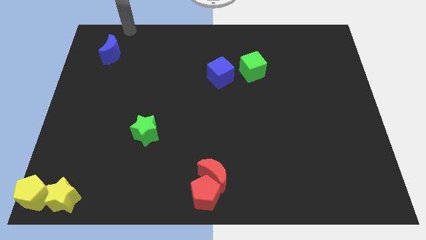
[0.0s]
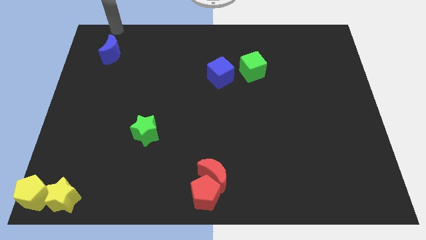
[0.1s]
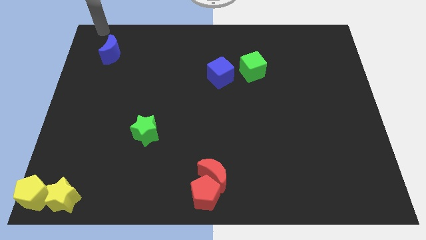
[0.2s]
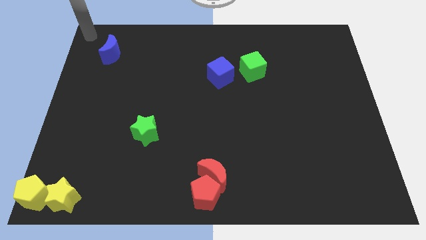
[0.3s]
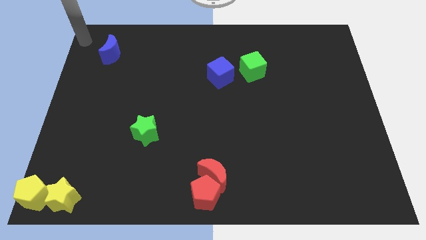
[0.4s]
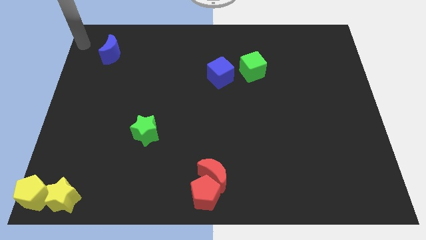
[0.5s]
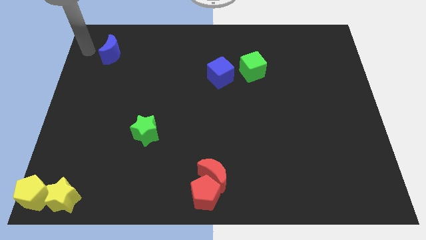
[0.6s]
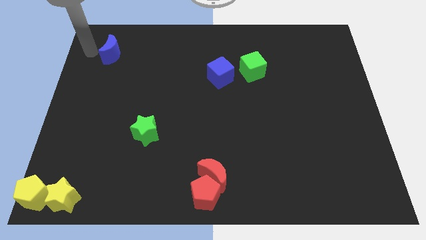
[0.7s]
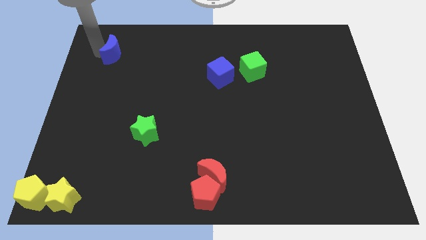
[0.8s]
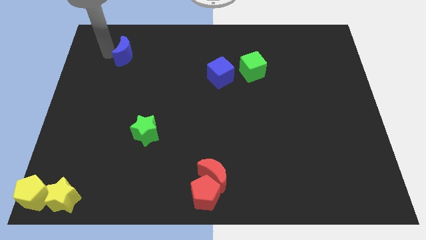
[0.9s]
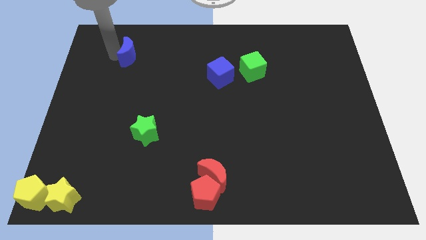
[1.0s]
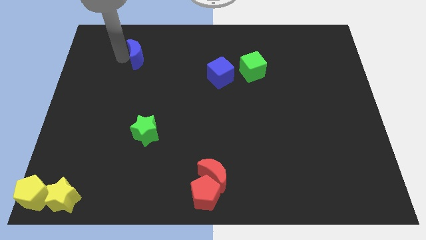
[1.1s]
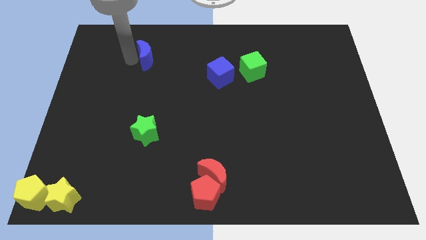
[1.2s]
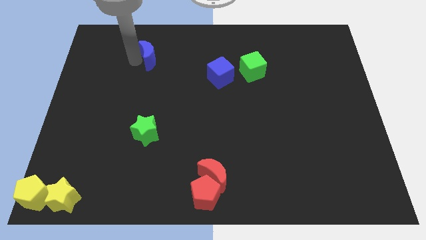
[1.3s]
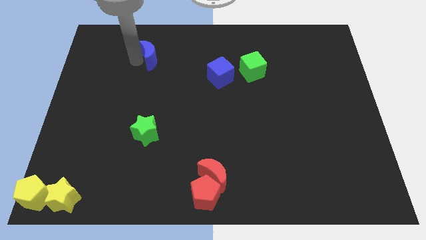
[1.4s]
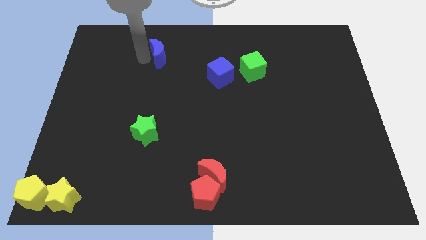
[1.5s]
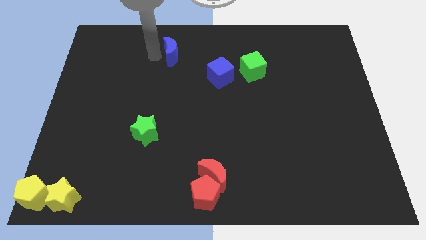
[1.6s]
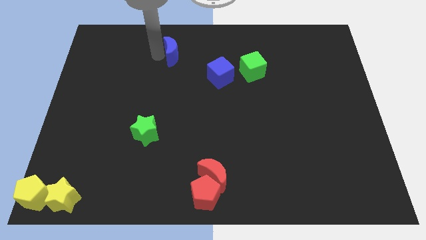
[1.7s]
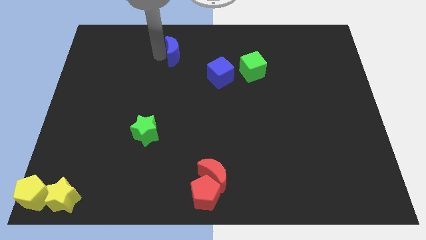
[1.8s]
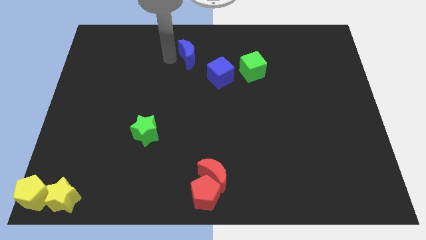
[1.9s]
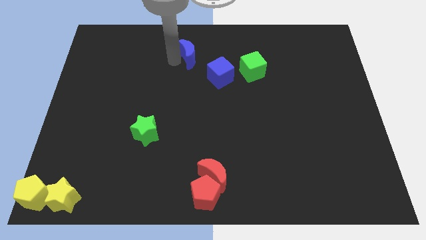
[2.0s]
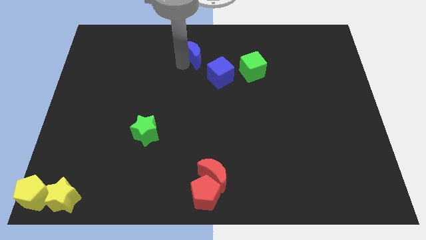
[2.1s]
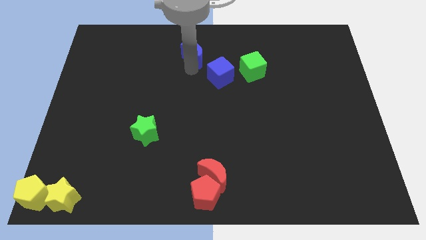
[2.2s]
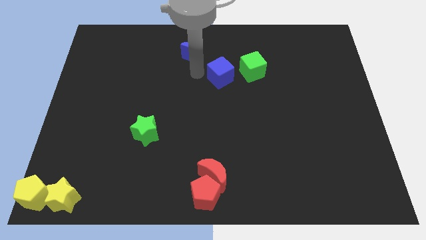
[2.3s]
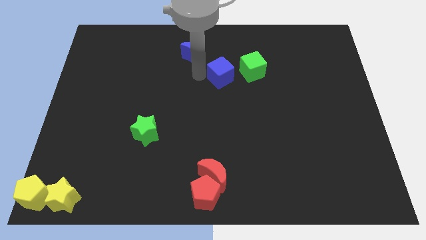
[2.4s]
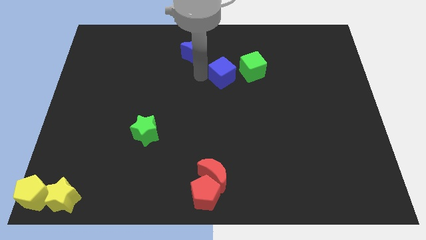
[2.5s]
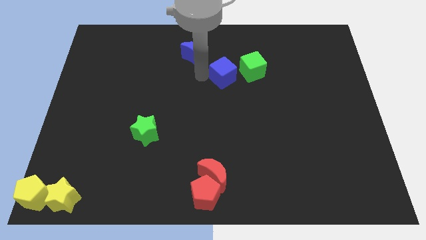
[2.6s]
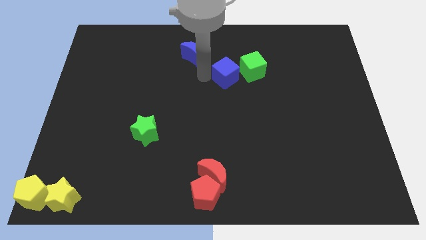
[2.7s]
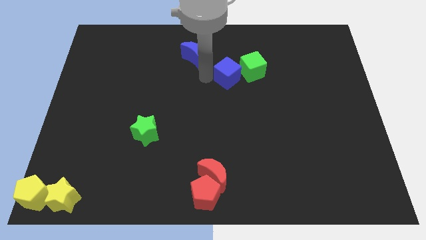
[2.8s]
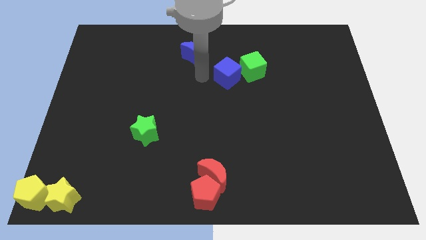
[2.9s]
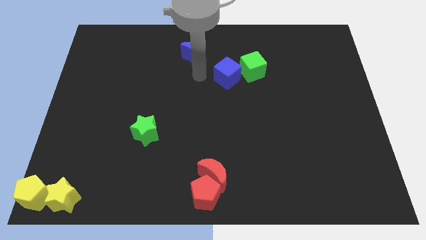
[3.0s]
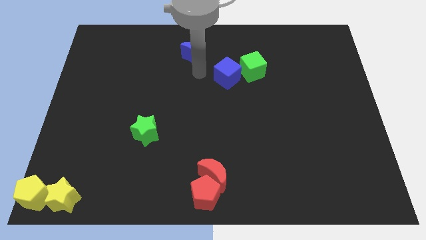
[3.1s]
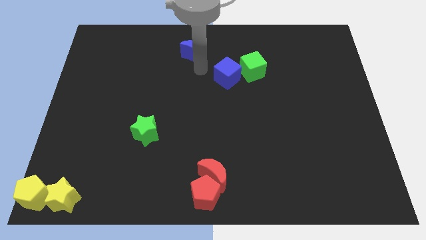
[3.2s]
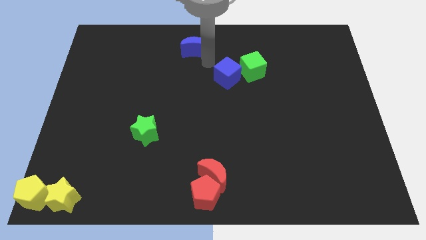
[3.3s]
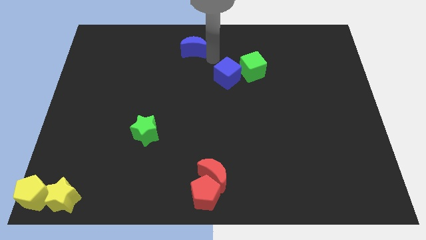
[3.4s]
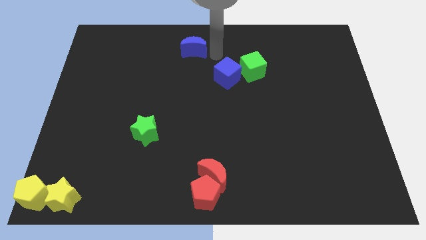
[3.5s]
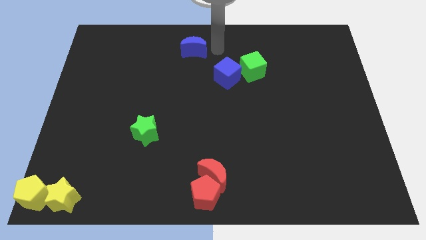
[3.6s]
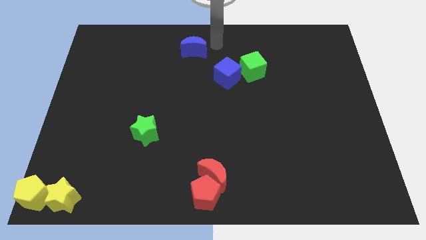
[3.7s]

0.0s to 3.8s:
move the blue crescent to the top center of the board

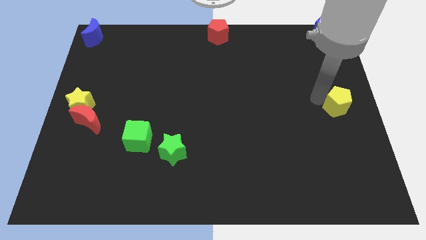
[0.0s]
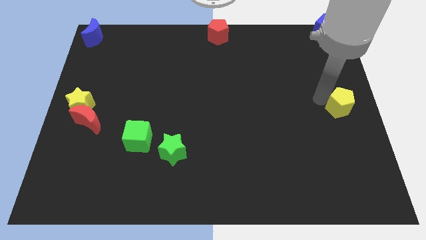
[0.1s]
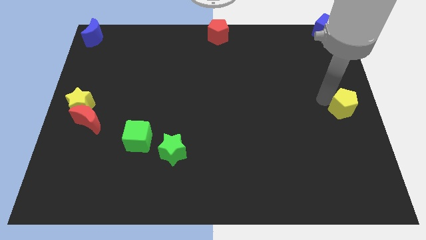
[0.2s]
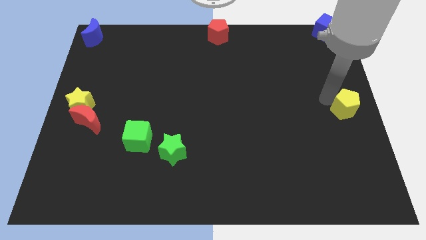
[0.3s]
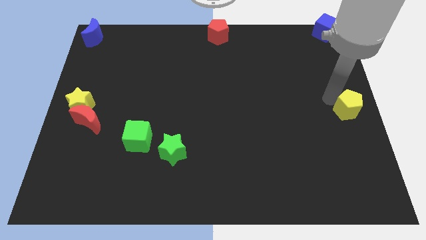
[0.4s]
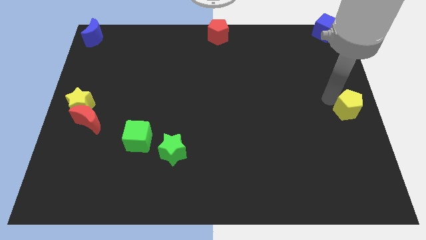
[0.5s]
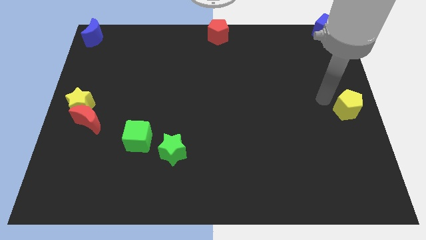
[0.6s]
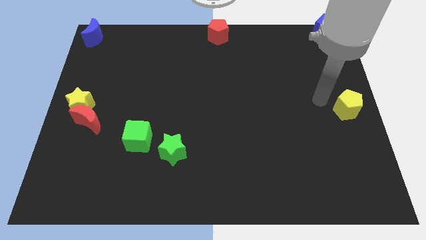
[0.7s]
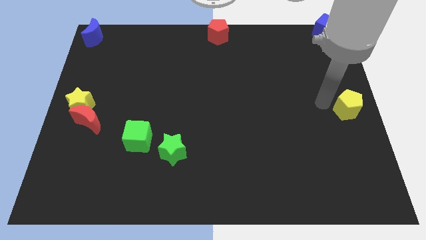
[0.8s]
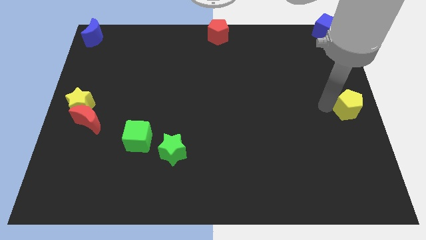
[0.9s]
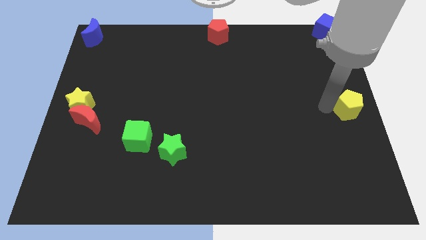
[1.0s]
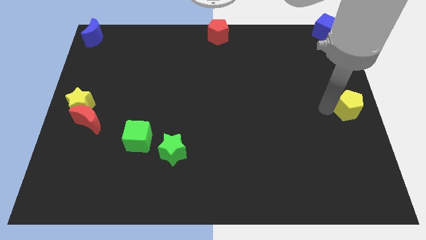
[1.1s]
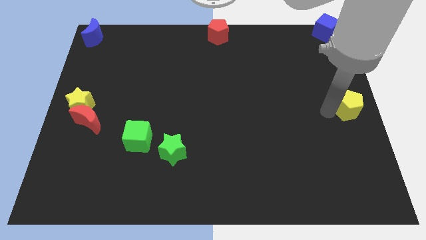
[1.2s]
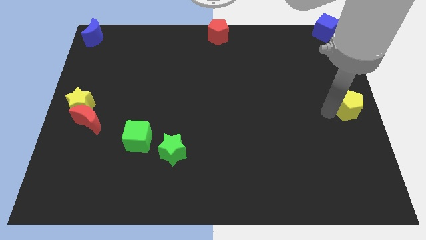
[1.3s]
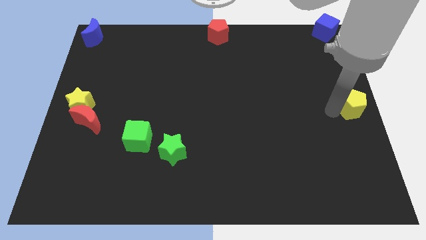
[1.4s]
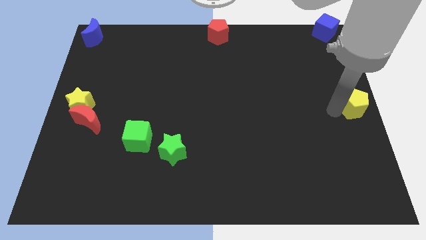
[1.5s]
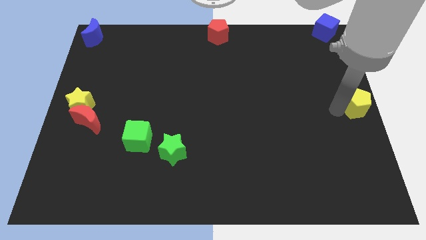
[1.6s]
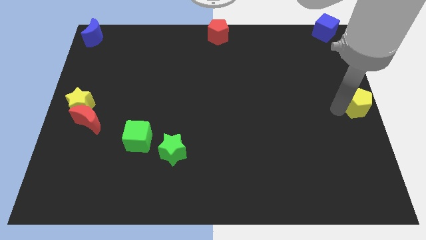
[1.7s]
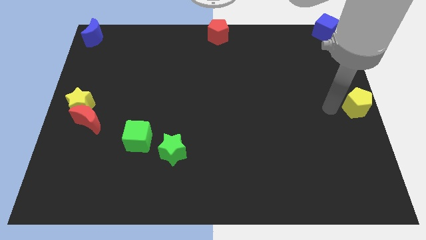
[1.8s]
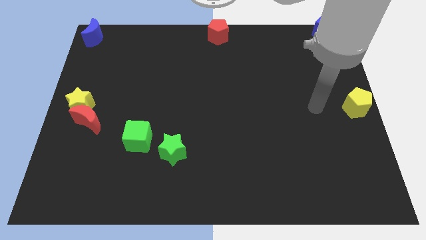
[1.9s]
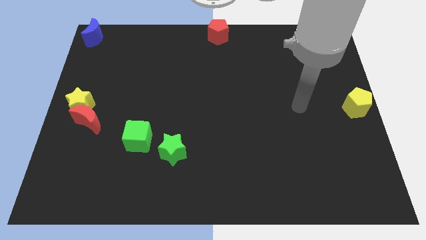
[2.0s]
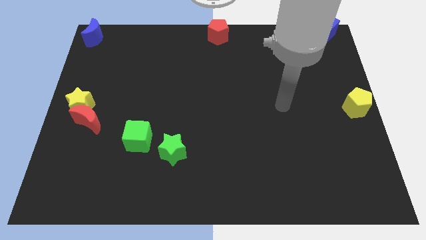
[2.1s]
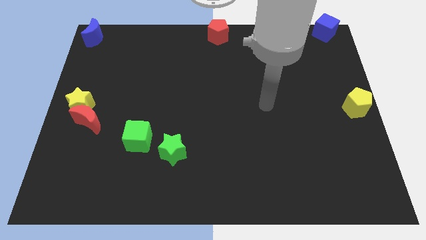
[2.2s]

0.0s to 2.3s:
move the yellow pentagon to the center right

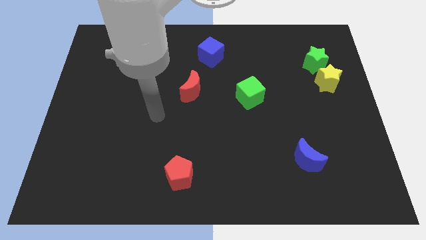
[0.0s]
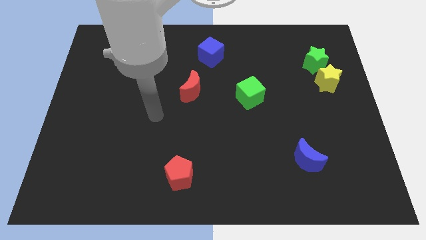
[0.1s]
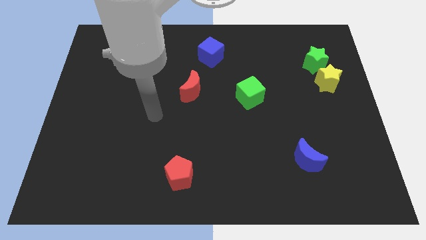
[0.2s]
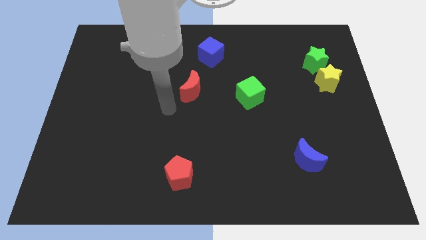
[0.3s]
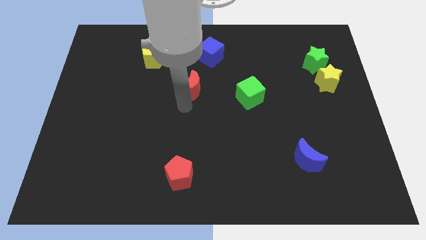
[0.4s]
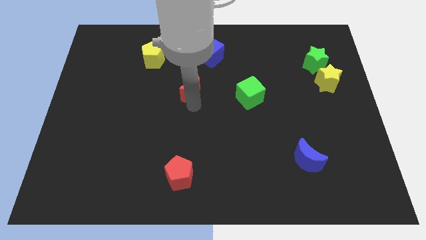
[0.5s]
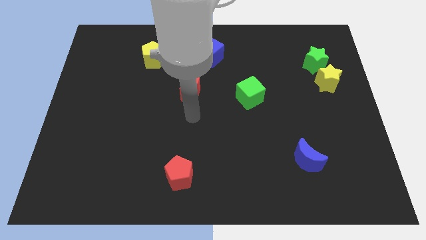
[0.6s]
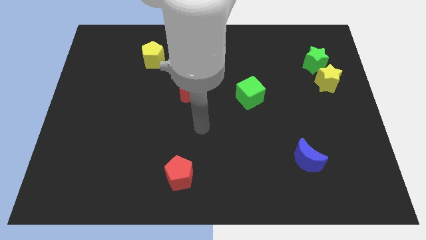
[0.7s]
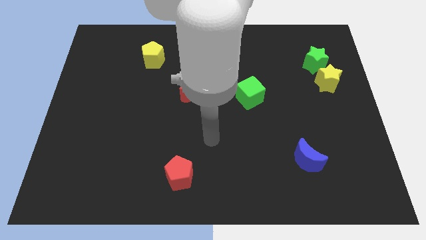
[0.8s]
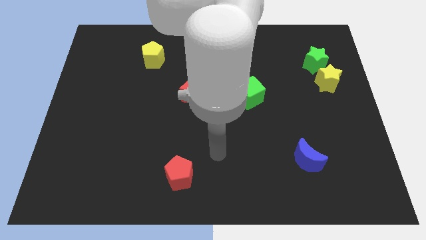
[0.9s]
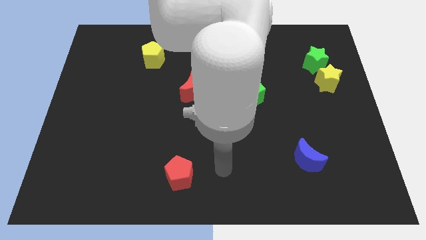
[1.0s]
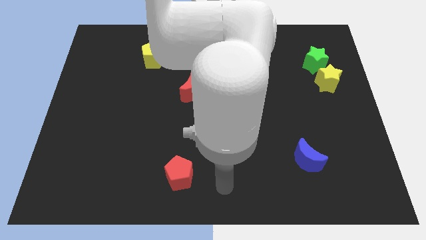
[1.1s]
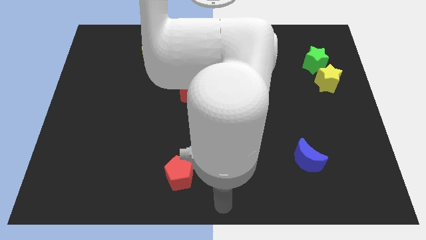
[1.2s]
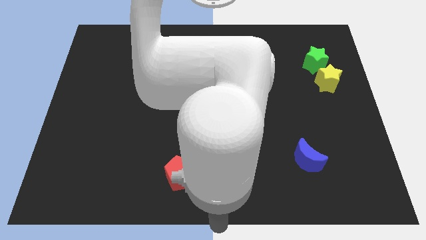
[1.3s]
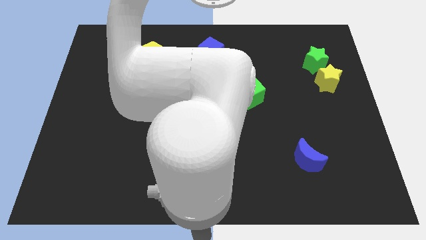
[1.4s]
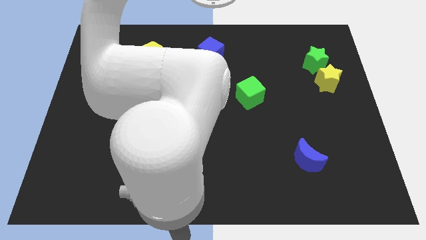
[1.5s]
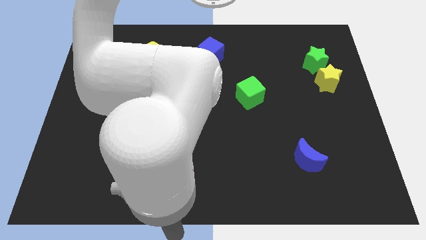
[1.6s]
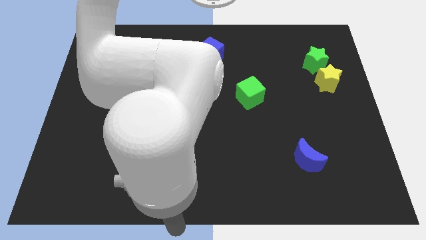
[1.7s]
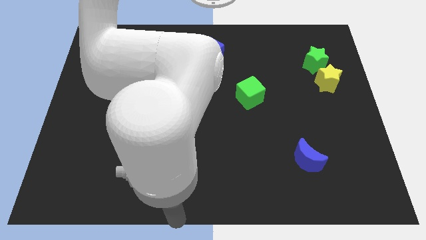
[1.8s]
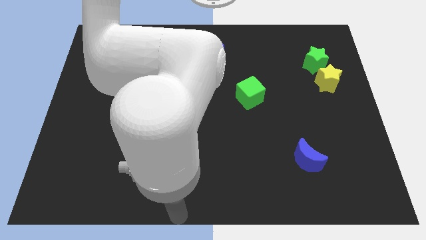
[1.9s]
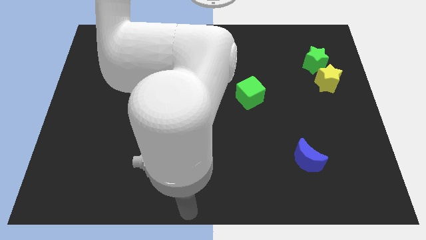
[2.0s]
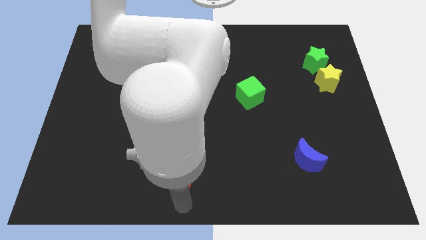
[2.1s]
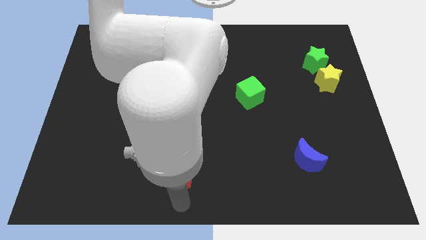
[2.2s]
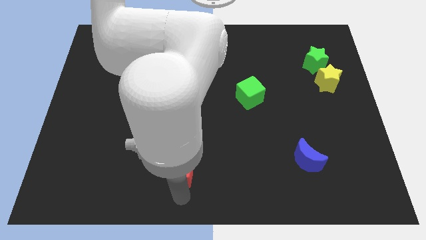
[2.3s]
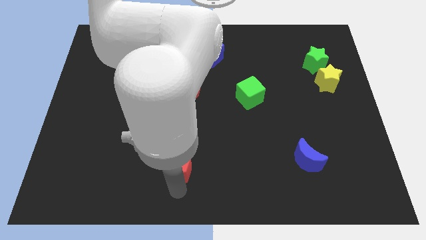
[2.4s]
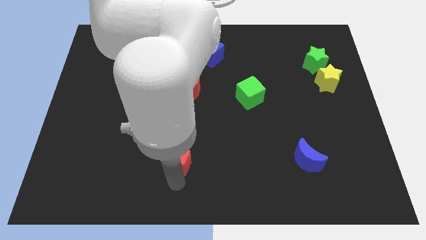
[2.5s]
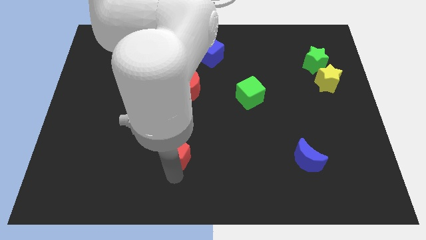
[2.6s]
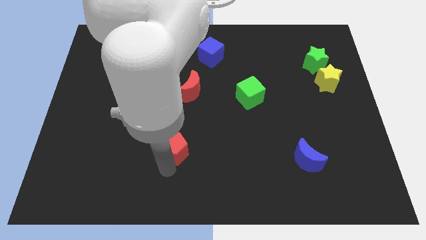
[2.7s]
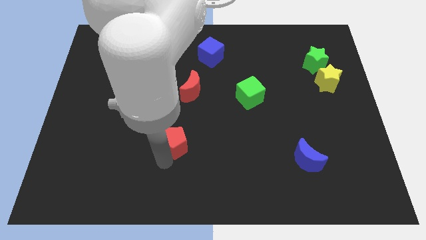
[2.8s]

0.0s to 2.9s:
push the red pentagon slightly upwards

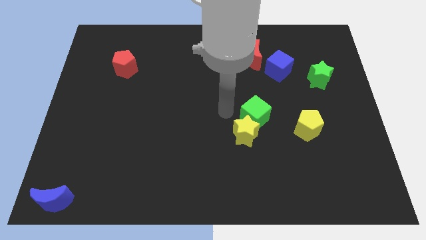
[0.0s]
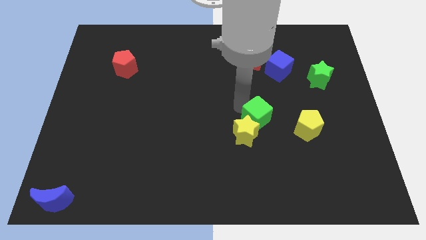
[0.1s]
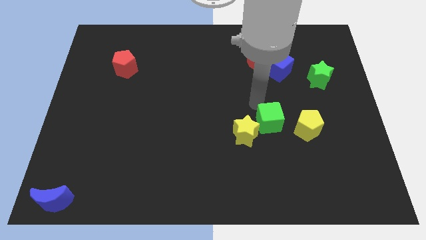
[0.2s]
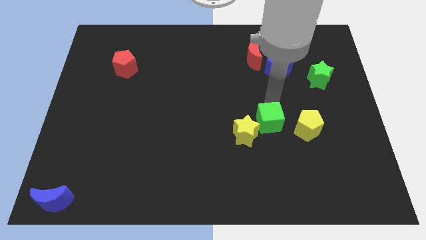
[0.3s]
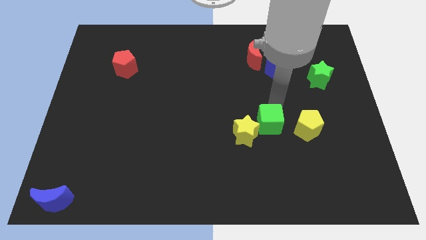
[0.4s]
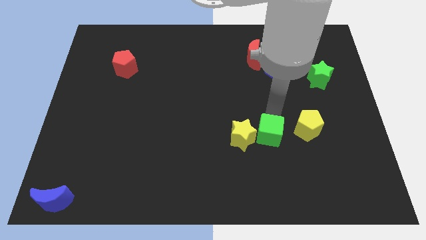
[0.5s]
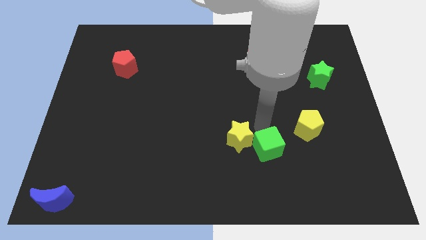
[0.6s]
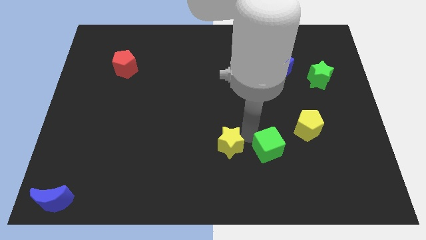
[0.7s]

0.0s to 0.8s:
place the green cube to the right of yellow star
